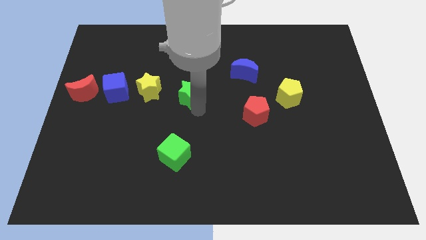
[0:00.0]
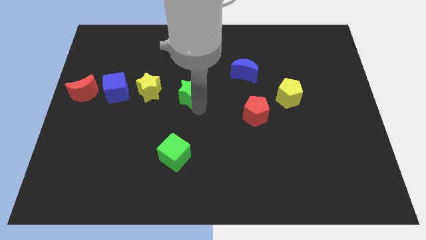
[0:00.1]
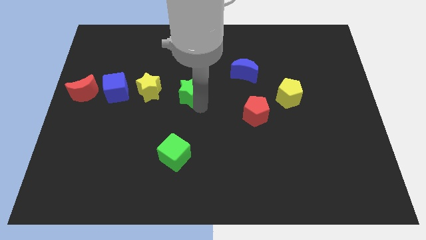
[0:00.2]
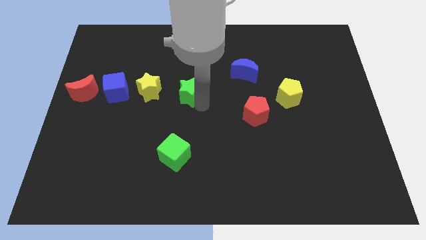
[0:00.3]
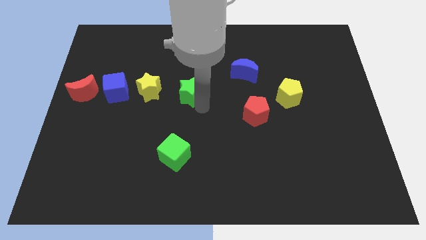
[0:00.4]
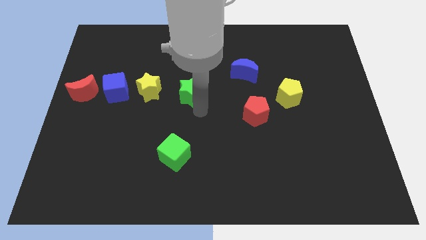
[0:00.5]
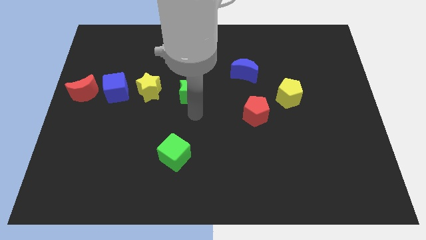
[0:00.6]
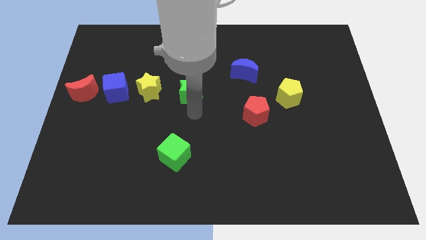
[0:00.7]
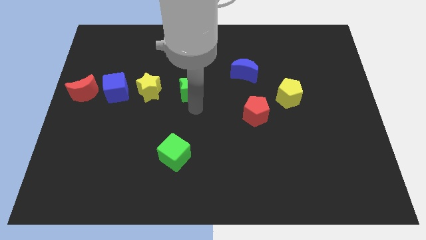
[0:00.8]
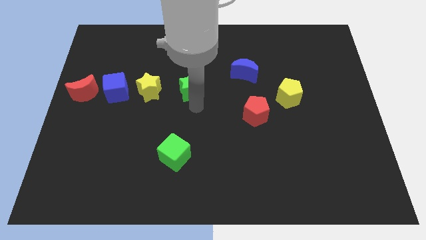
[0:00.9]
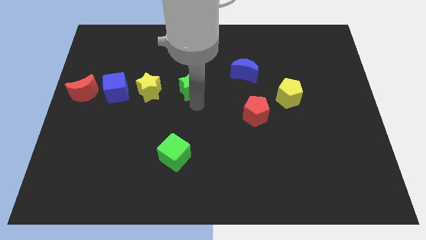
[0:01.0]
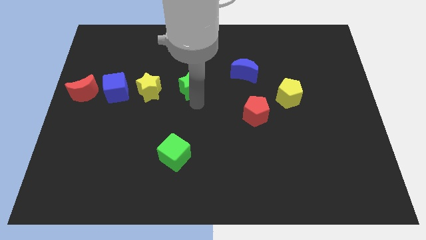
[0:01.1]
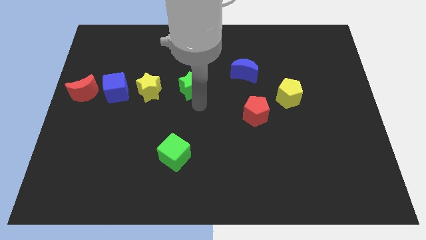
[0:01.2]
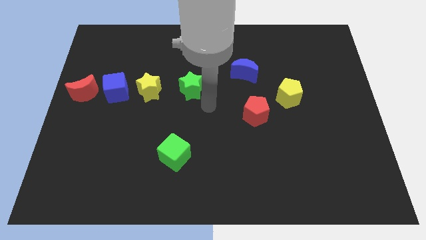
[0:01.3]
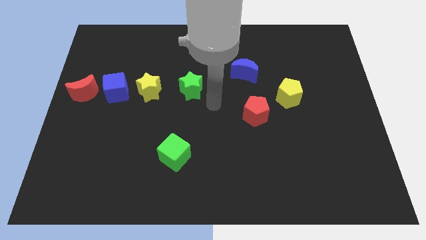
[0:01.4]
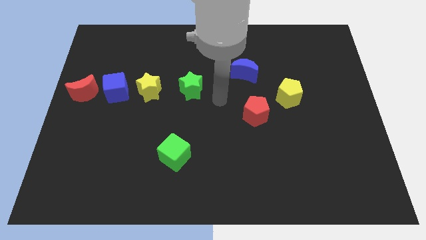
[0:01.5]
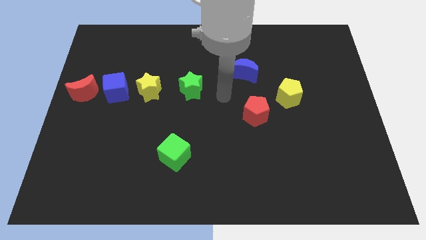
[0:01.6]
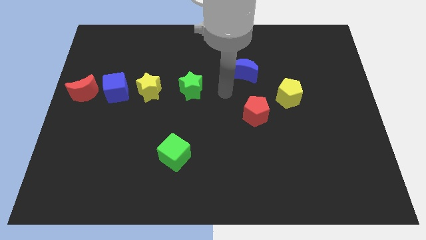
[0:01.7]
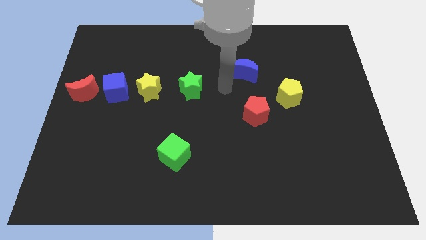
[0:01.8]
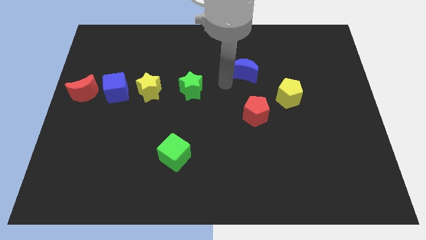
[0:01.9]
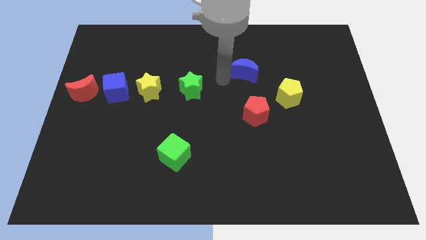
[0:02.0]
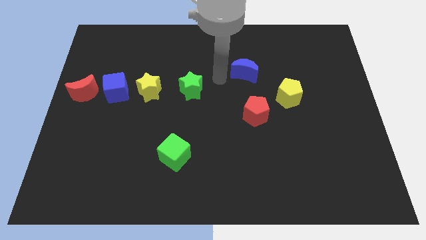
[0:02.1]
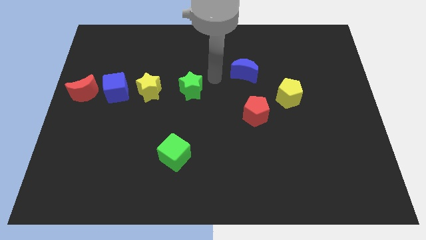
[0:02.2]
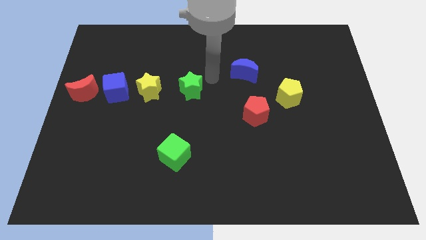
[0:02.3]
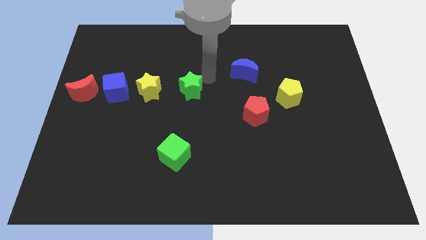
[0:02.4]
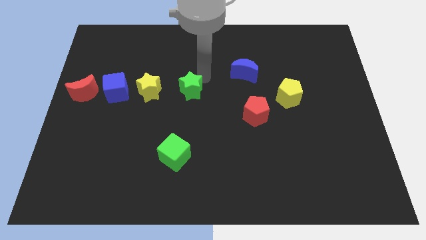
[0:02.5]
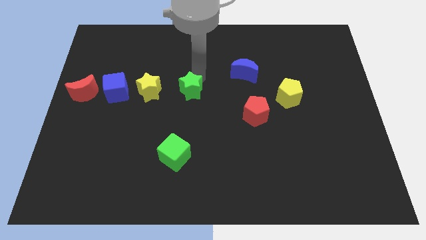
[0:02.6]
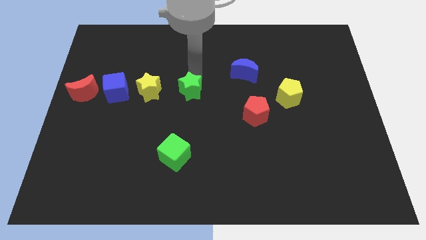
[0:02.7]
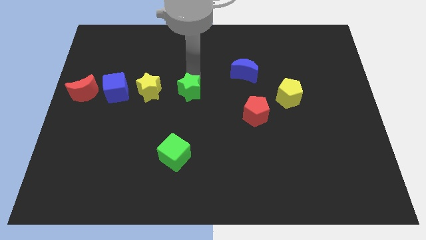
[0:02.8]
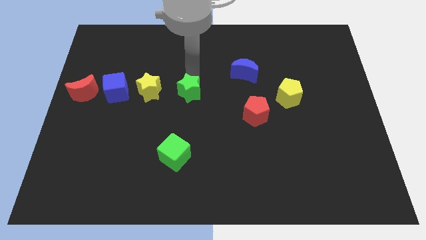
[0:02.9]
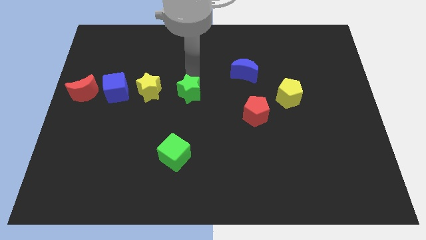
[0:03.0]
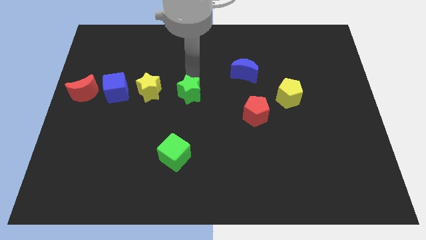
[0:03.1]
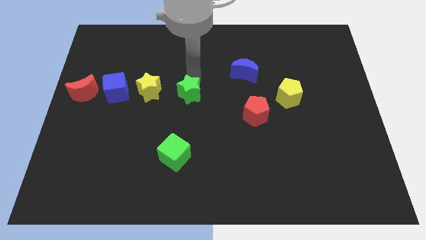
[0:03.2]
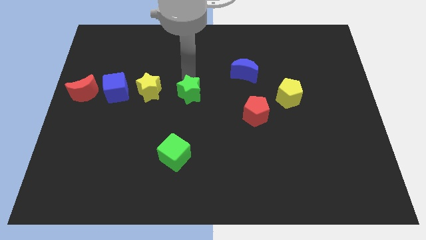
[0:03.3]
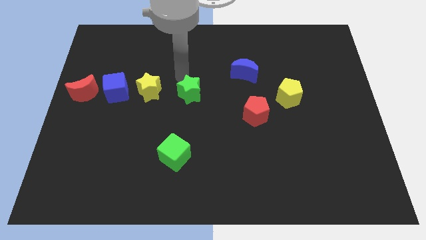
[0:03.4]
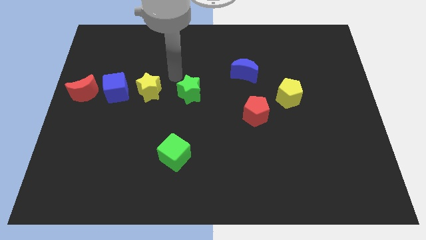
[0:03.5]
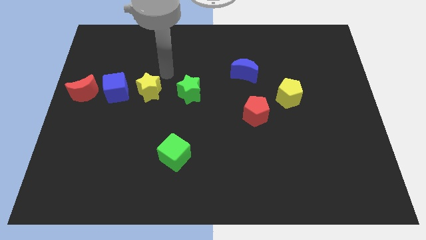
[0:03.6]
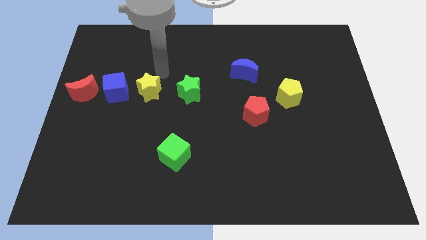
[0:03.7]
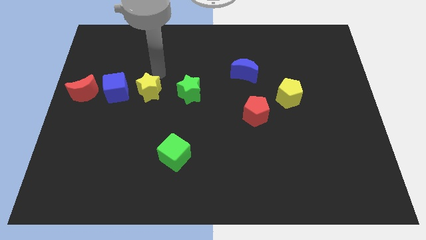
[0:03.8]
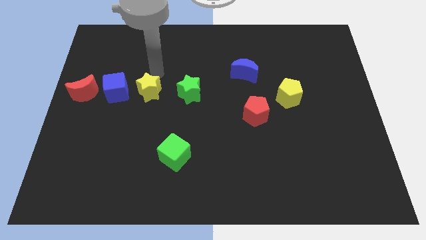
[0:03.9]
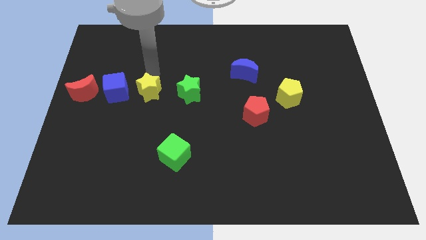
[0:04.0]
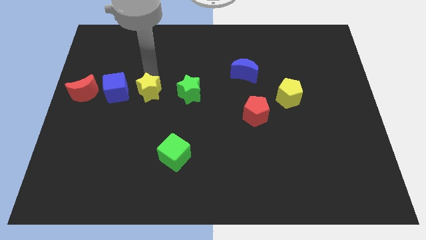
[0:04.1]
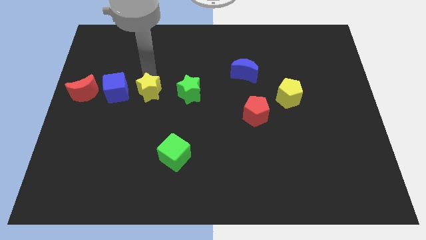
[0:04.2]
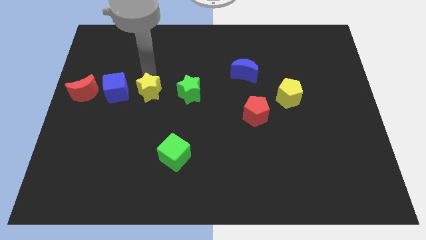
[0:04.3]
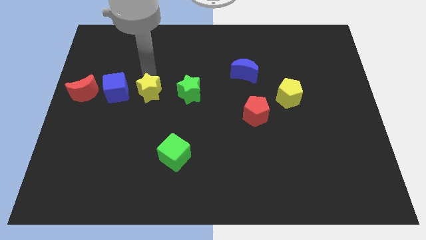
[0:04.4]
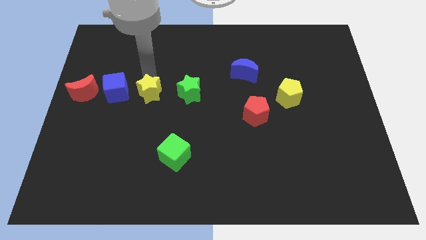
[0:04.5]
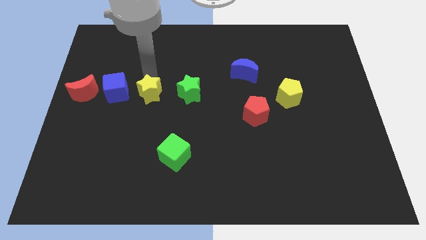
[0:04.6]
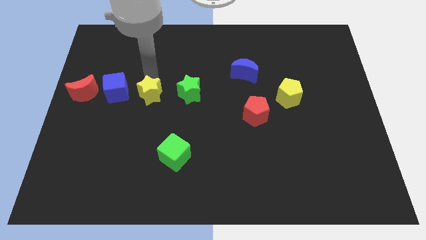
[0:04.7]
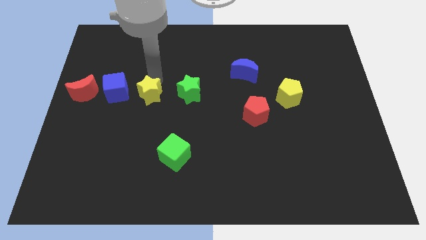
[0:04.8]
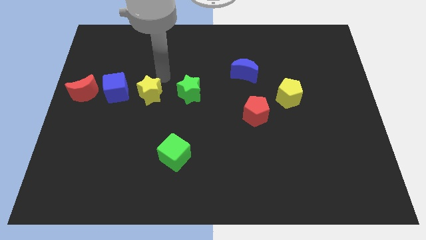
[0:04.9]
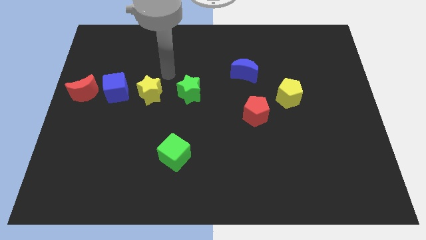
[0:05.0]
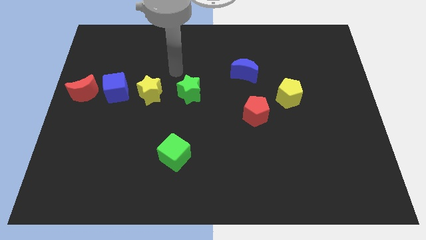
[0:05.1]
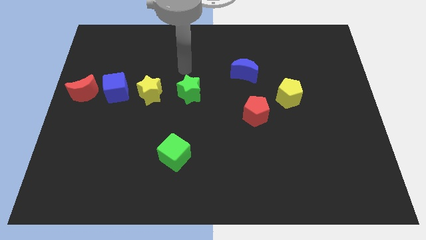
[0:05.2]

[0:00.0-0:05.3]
adjust the green and yellow star to the right of blue cube

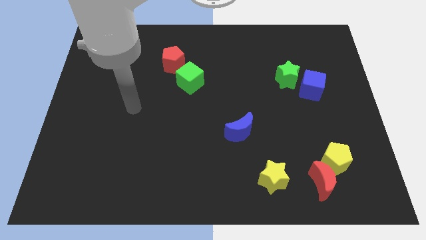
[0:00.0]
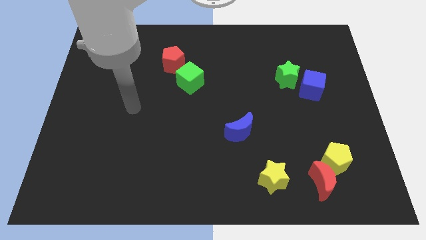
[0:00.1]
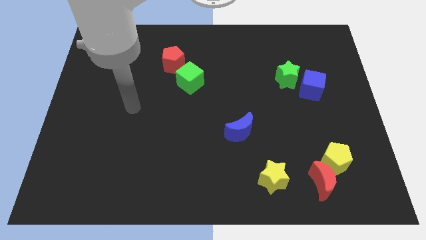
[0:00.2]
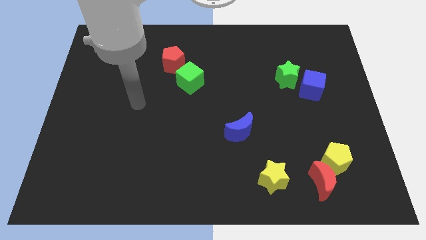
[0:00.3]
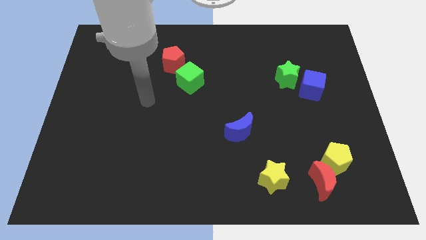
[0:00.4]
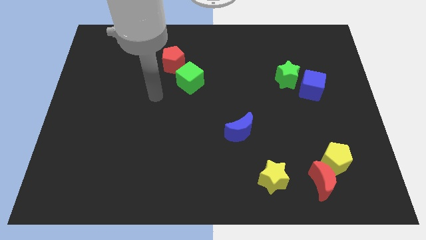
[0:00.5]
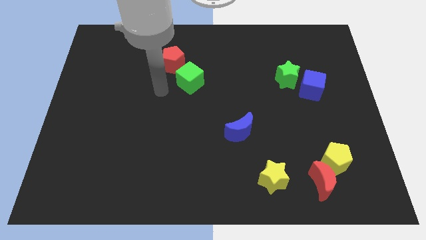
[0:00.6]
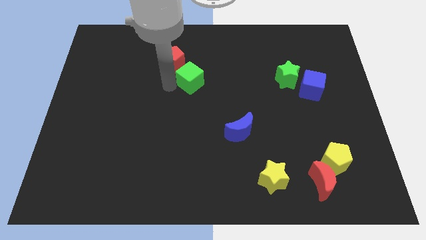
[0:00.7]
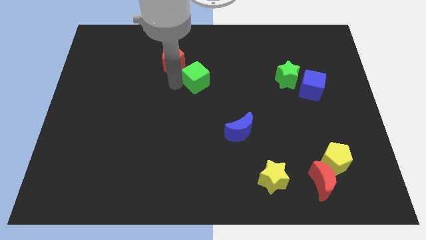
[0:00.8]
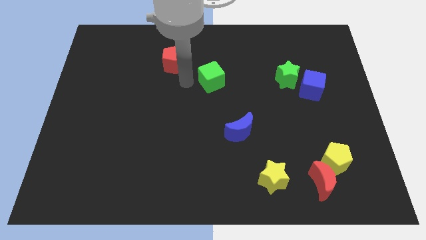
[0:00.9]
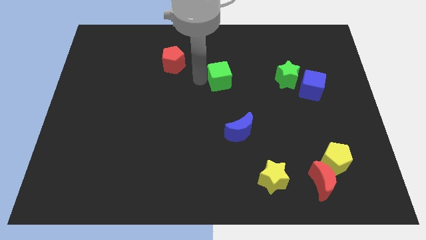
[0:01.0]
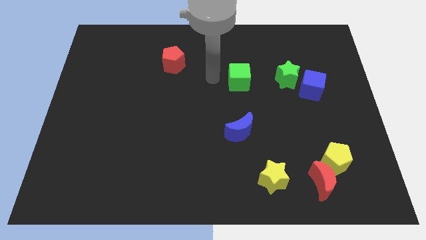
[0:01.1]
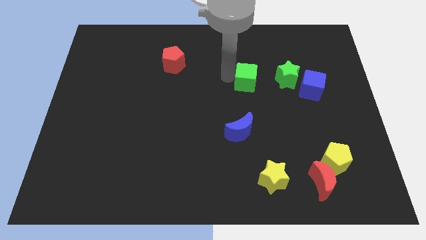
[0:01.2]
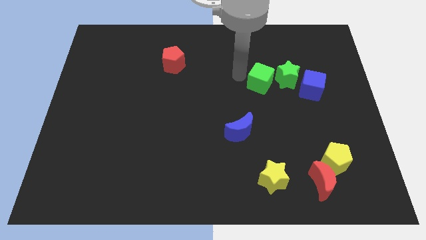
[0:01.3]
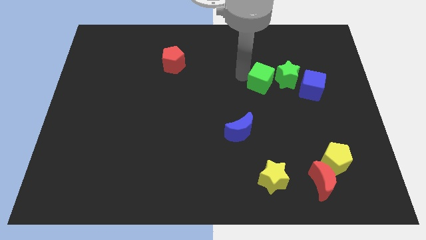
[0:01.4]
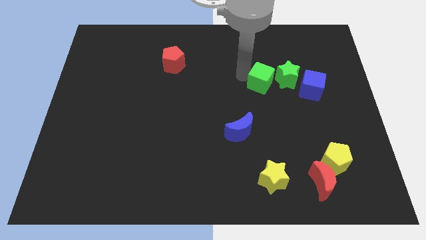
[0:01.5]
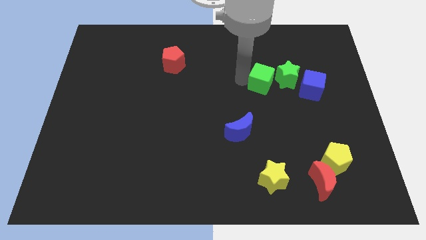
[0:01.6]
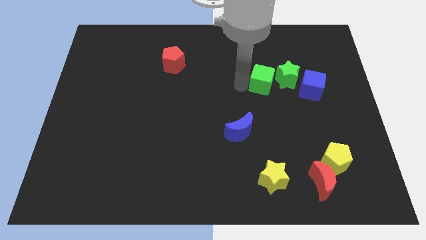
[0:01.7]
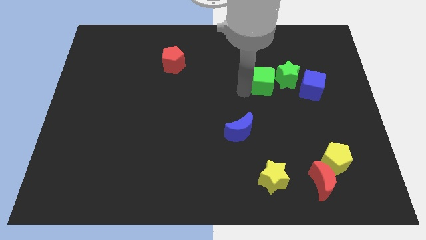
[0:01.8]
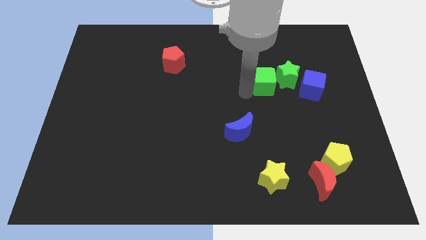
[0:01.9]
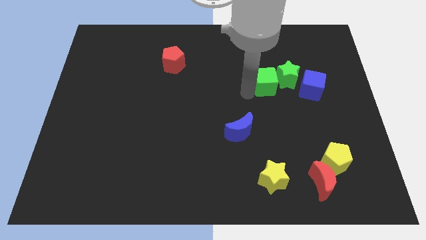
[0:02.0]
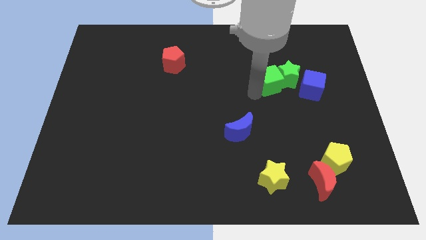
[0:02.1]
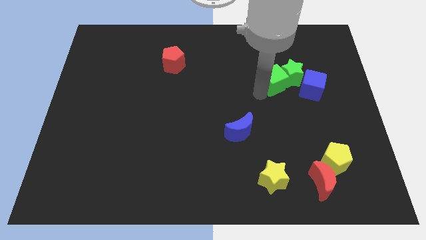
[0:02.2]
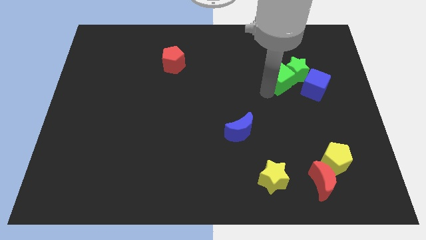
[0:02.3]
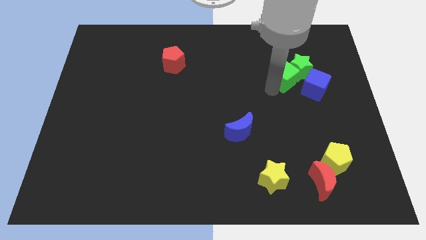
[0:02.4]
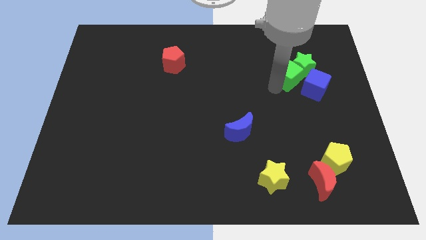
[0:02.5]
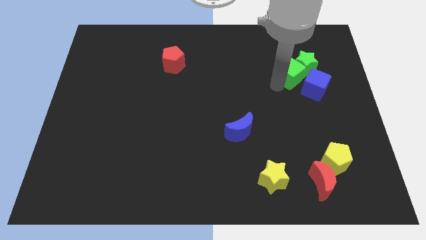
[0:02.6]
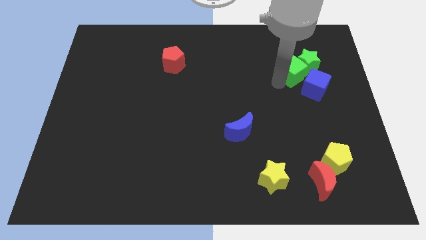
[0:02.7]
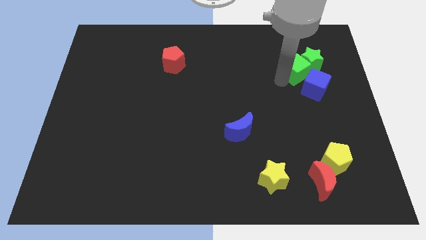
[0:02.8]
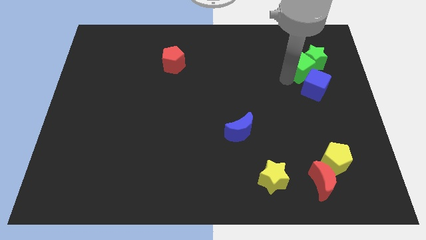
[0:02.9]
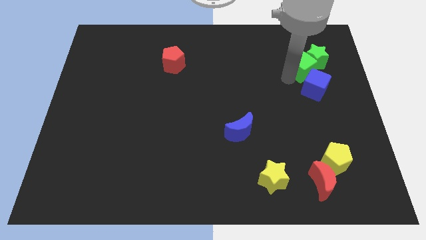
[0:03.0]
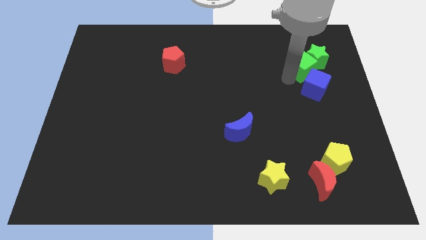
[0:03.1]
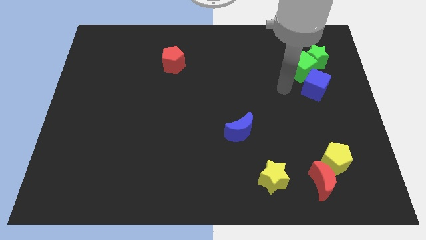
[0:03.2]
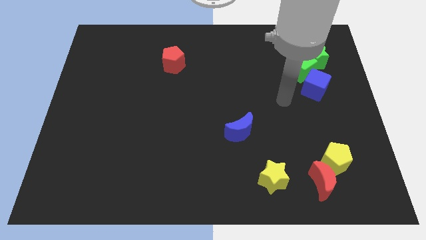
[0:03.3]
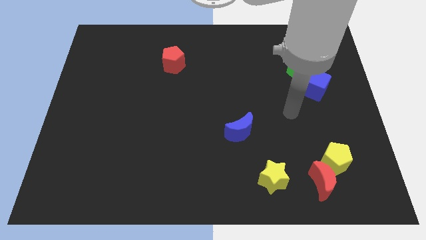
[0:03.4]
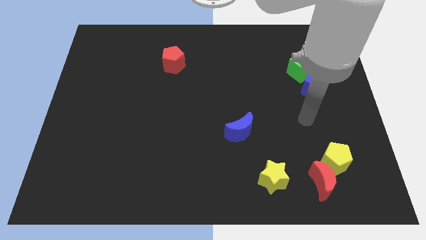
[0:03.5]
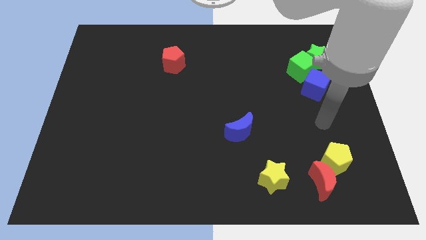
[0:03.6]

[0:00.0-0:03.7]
push green cube and green star together above blue cube
